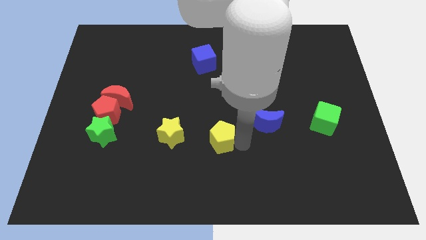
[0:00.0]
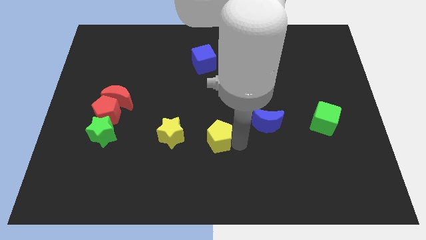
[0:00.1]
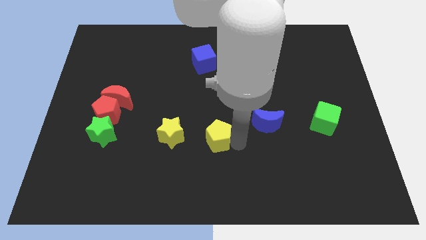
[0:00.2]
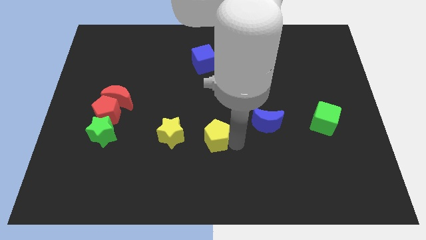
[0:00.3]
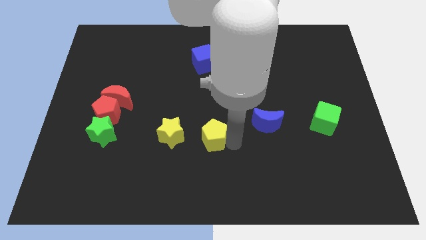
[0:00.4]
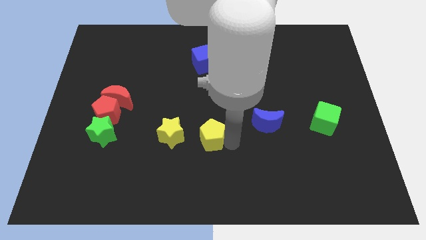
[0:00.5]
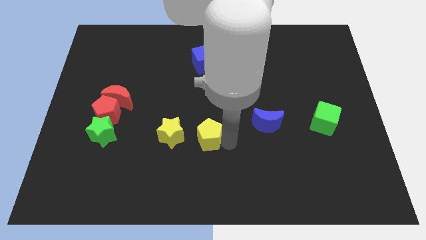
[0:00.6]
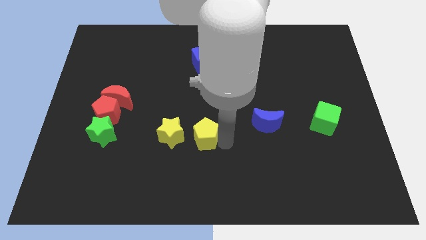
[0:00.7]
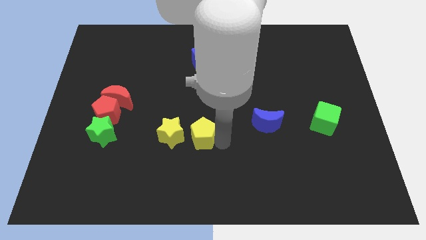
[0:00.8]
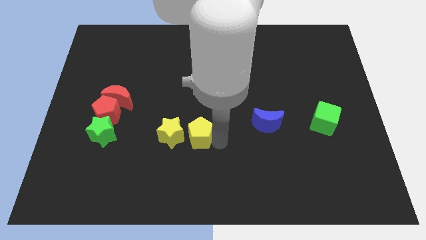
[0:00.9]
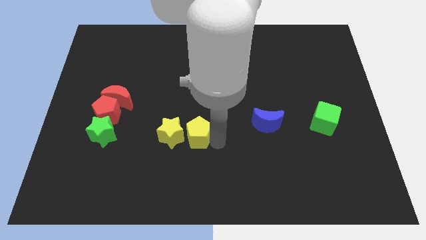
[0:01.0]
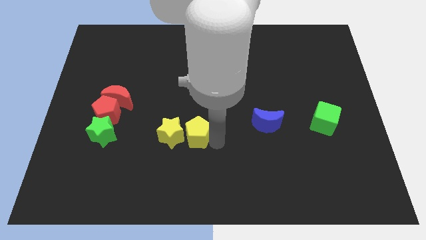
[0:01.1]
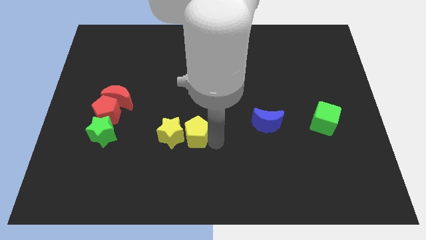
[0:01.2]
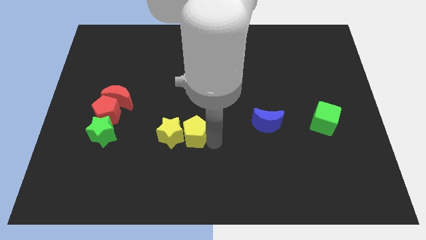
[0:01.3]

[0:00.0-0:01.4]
move the yellow pentagon close to the right of the yellow star

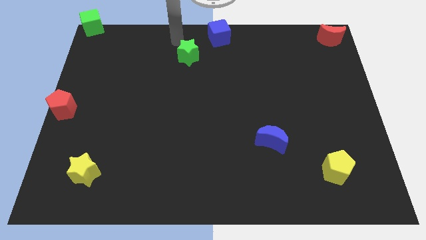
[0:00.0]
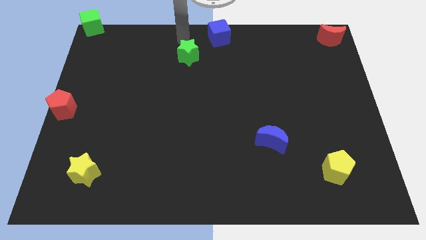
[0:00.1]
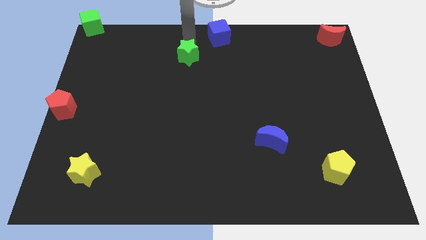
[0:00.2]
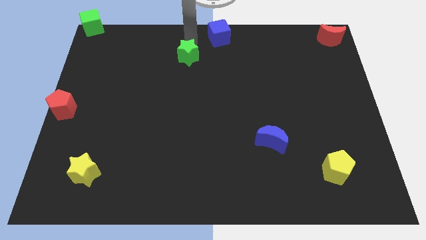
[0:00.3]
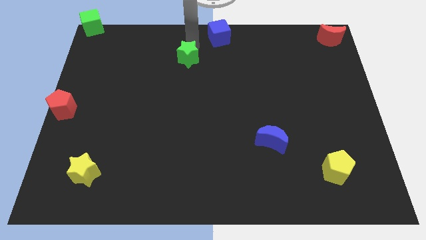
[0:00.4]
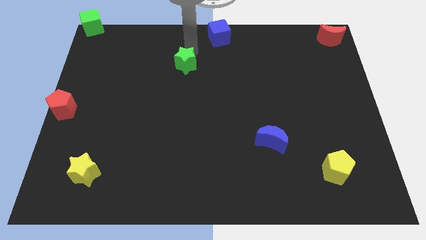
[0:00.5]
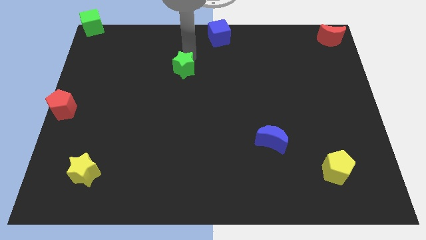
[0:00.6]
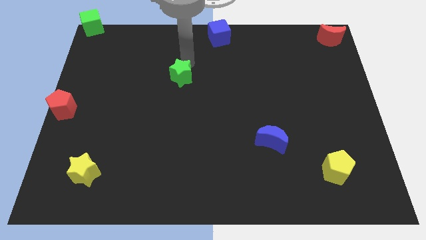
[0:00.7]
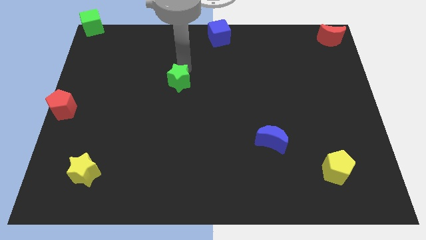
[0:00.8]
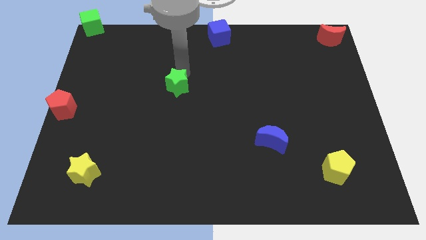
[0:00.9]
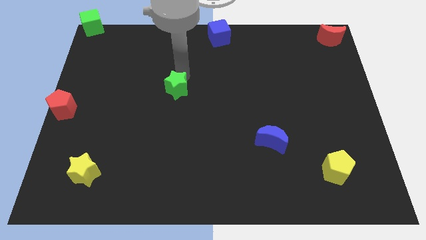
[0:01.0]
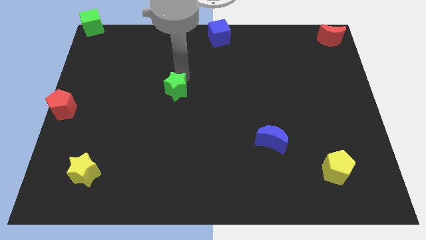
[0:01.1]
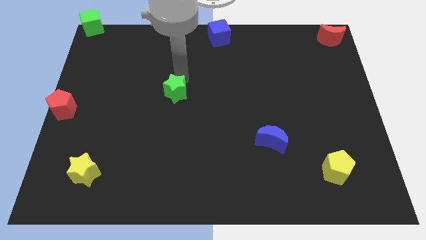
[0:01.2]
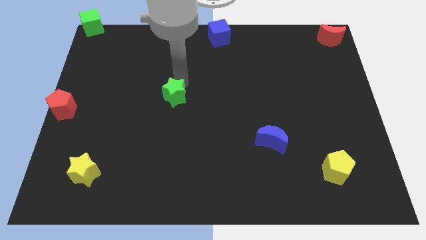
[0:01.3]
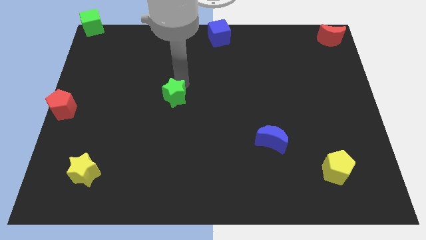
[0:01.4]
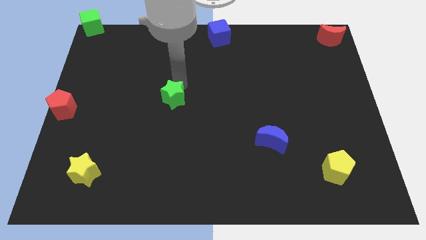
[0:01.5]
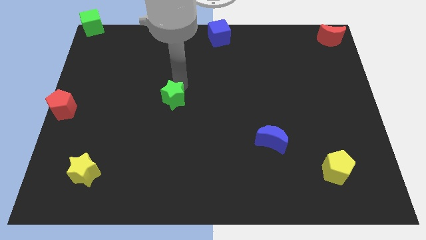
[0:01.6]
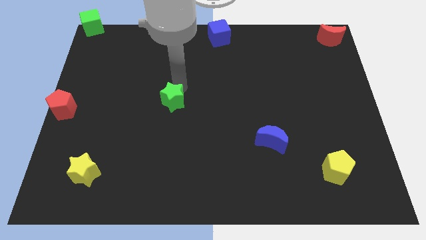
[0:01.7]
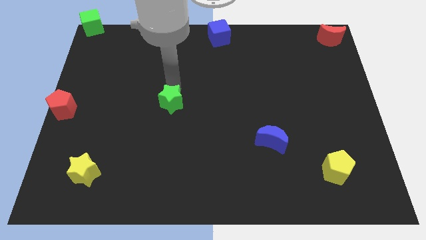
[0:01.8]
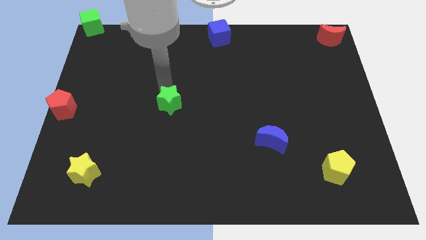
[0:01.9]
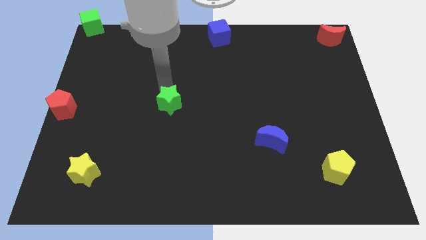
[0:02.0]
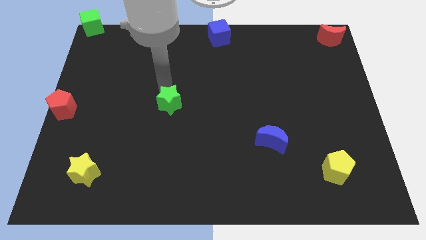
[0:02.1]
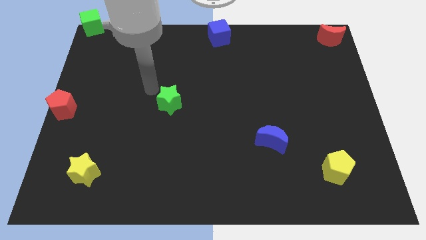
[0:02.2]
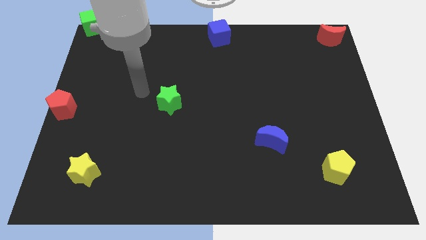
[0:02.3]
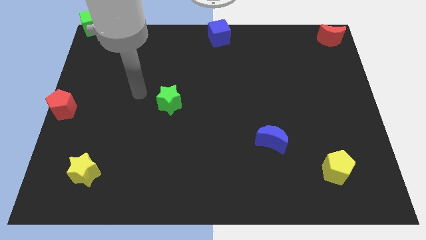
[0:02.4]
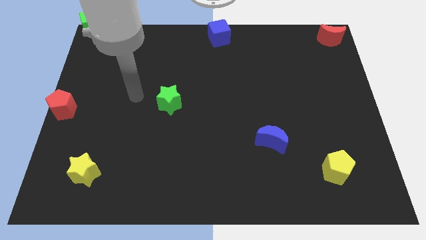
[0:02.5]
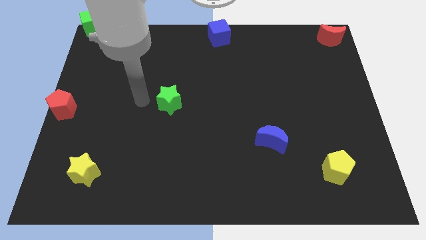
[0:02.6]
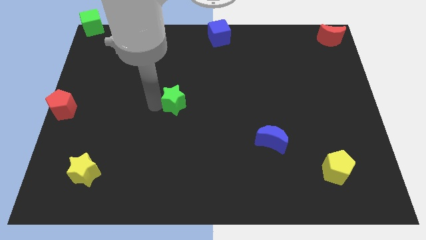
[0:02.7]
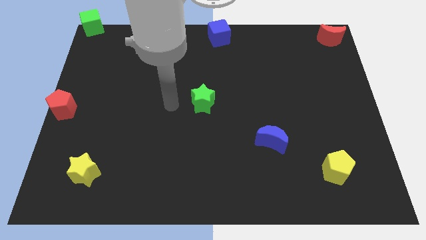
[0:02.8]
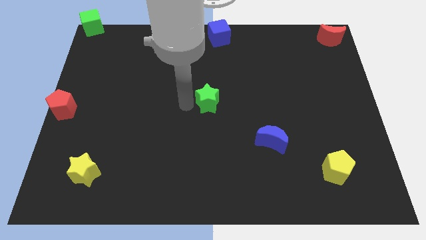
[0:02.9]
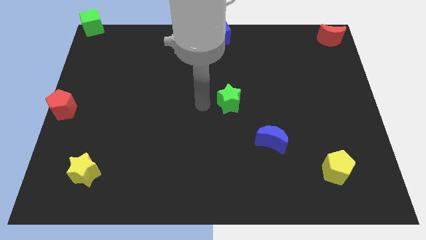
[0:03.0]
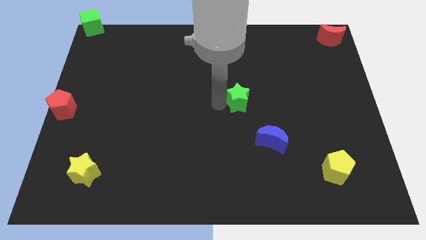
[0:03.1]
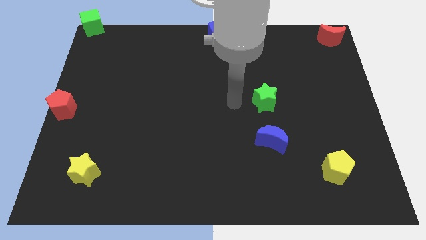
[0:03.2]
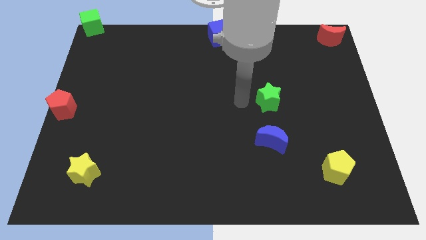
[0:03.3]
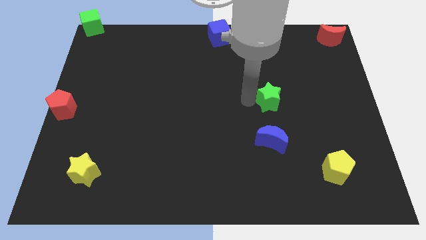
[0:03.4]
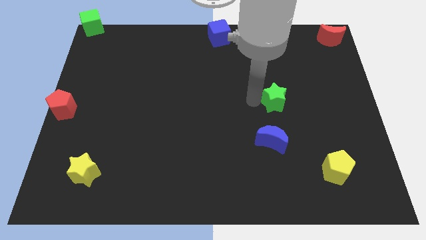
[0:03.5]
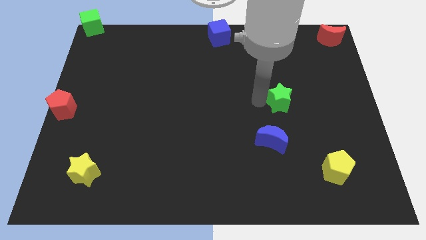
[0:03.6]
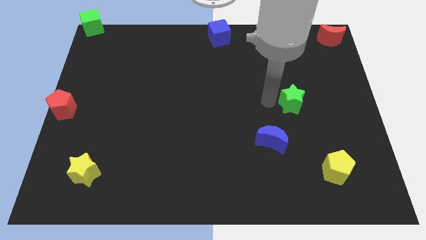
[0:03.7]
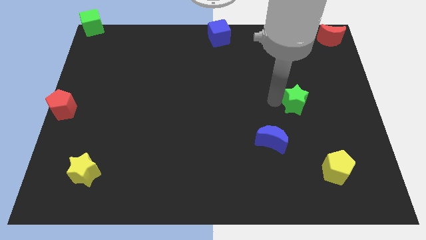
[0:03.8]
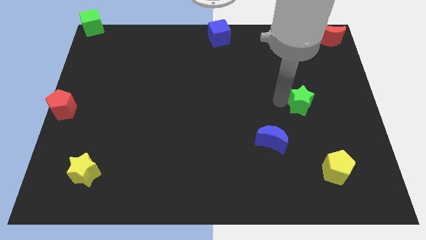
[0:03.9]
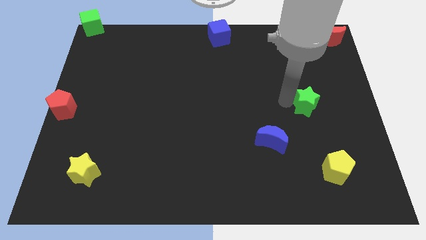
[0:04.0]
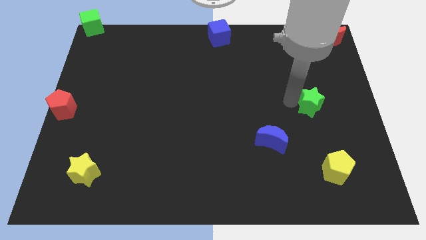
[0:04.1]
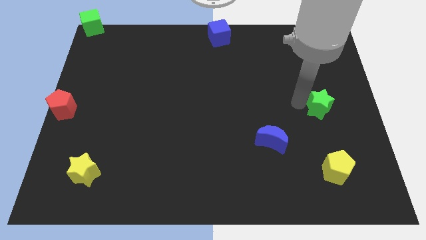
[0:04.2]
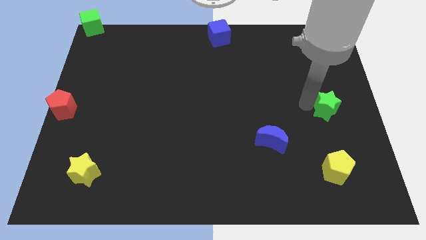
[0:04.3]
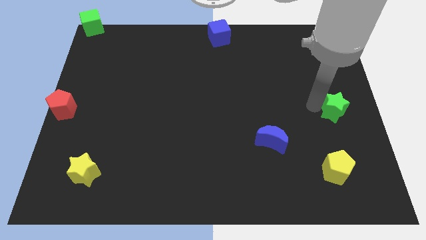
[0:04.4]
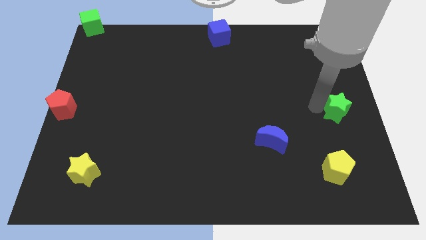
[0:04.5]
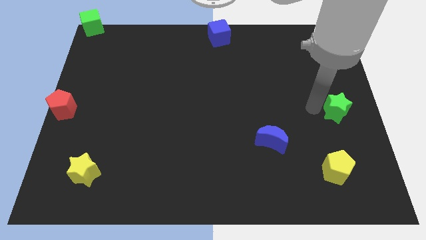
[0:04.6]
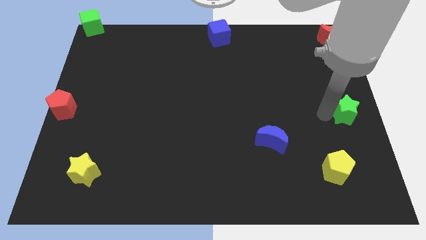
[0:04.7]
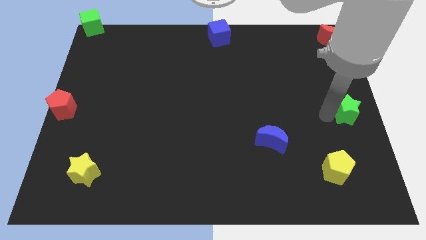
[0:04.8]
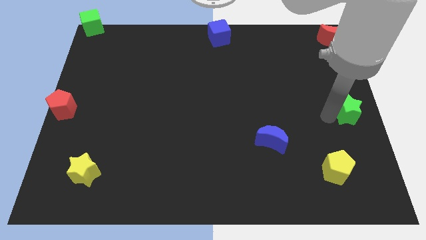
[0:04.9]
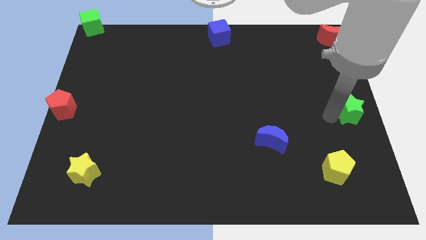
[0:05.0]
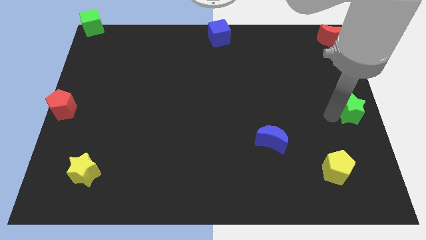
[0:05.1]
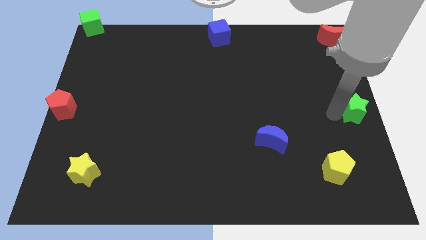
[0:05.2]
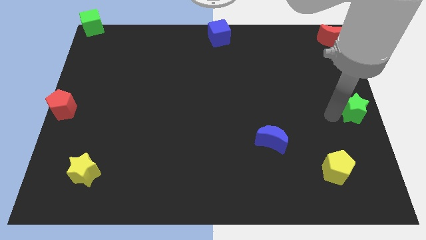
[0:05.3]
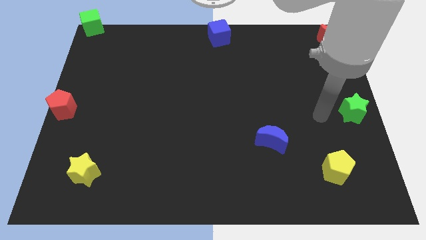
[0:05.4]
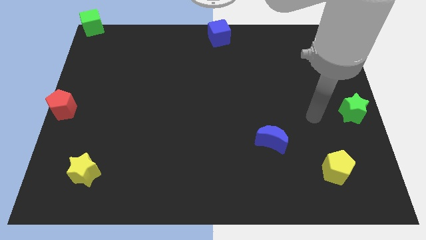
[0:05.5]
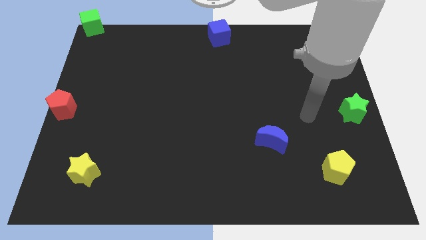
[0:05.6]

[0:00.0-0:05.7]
place green star to the right side of the baord

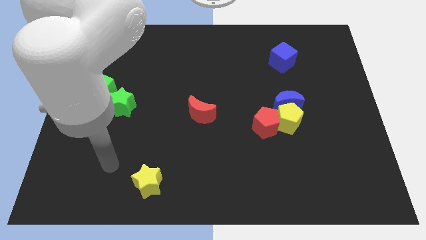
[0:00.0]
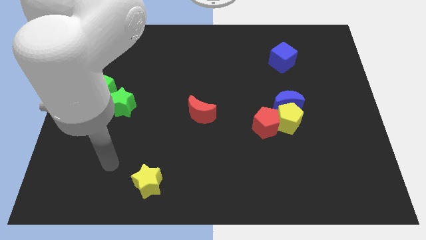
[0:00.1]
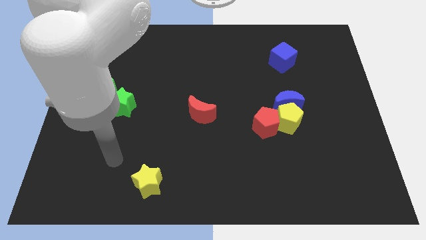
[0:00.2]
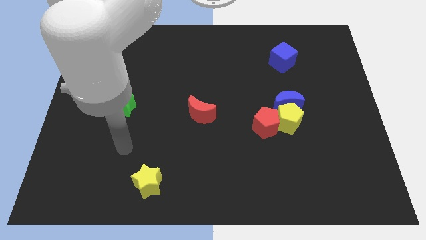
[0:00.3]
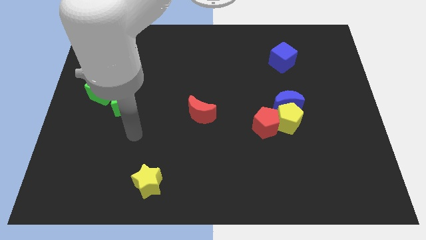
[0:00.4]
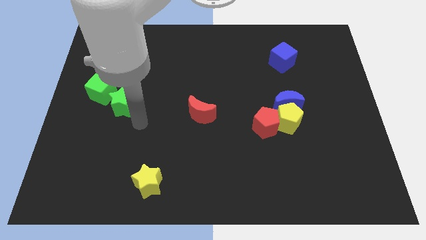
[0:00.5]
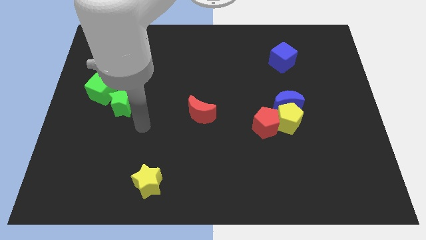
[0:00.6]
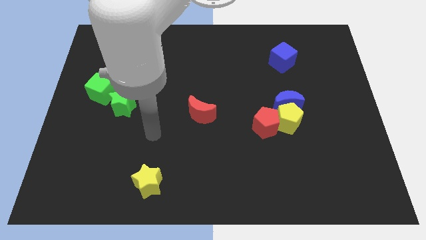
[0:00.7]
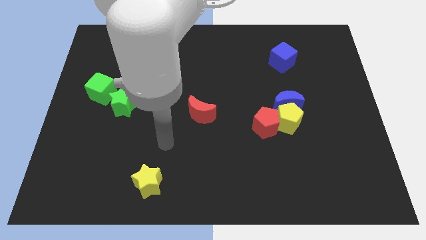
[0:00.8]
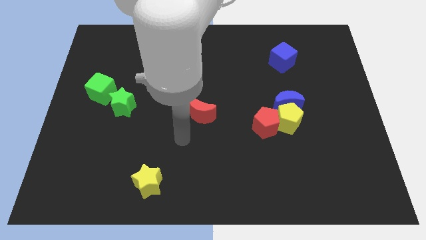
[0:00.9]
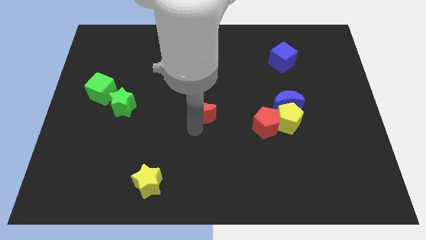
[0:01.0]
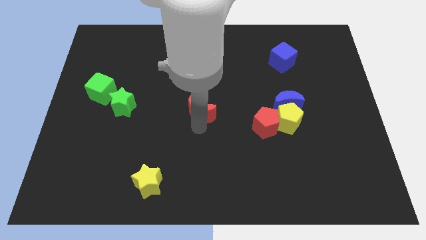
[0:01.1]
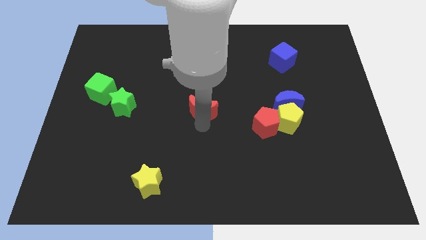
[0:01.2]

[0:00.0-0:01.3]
touch the bottom side of the red crescent

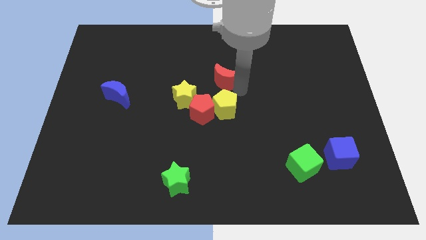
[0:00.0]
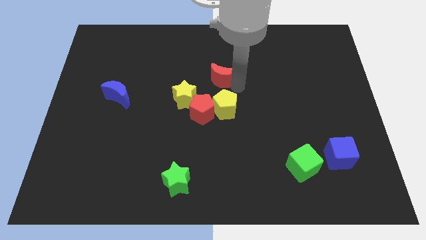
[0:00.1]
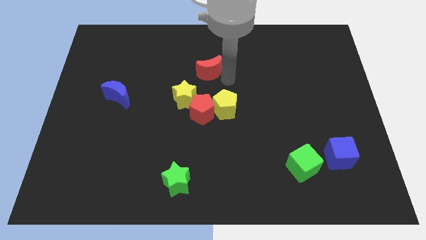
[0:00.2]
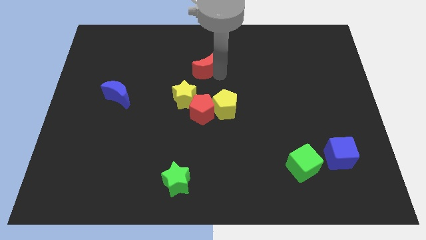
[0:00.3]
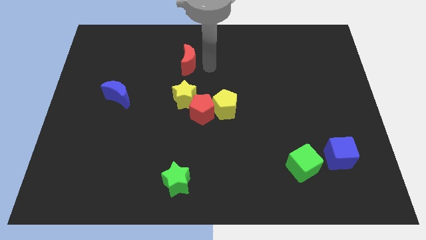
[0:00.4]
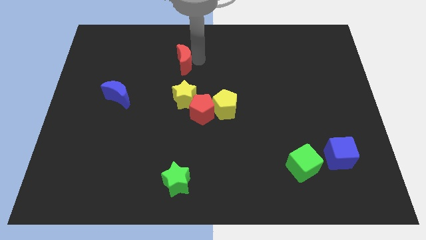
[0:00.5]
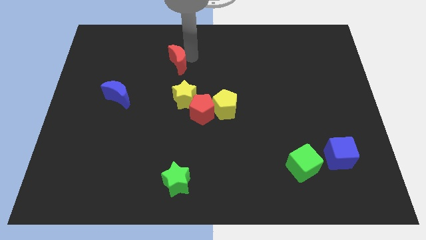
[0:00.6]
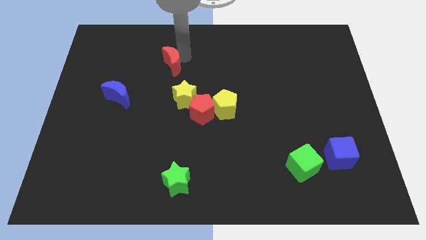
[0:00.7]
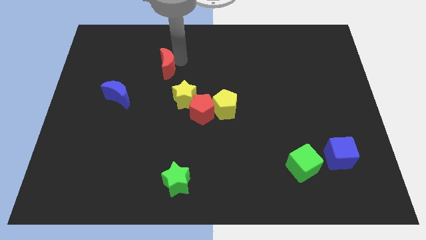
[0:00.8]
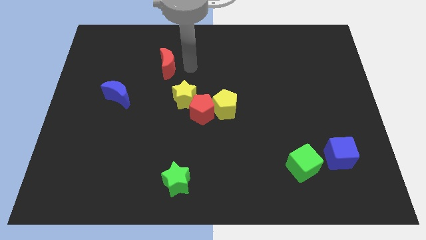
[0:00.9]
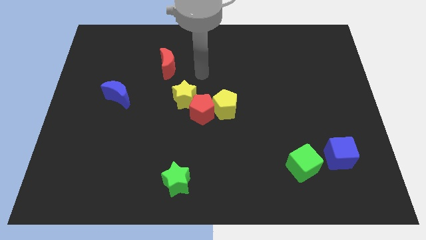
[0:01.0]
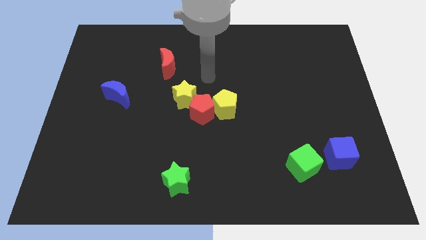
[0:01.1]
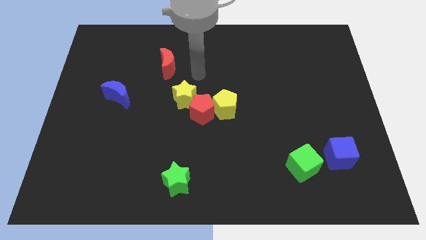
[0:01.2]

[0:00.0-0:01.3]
push the red moon towards the left side of the board
